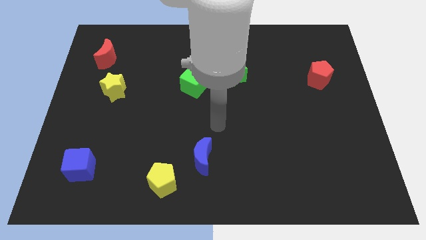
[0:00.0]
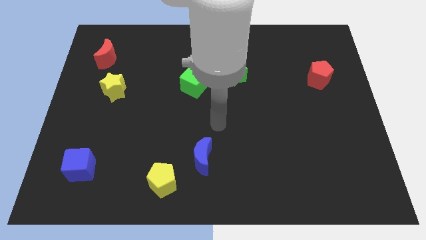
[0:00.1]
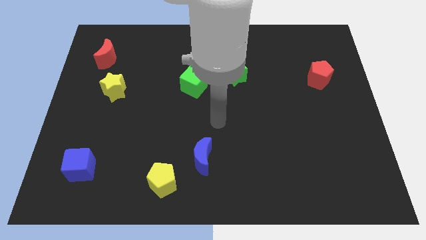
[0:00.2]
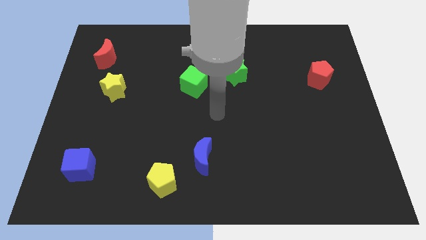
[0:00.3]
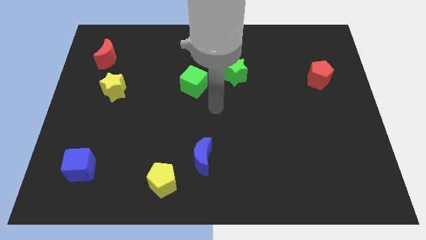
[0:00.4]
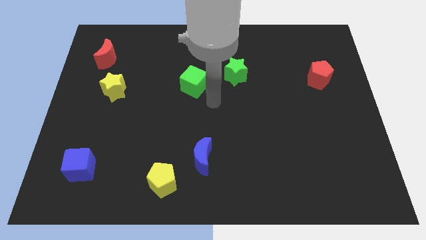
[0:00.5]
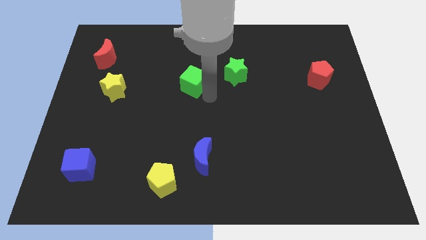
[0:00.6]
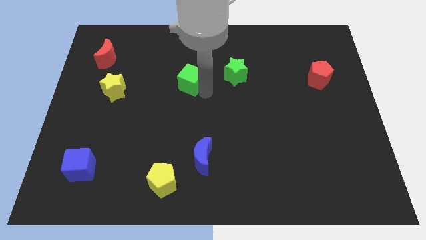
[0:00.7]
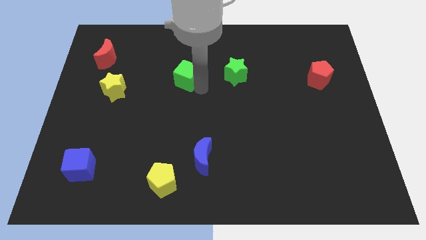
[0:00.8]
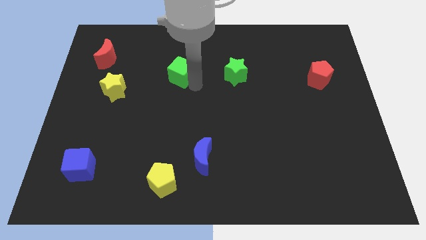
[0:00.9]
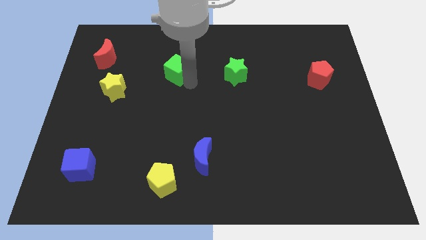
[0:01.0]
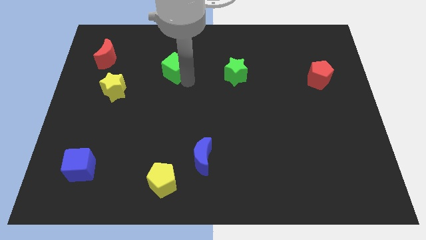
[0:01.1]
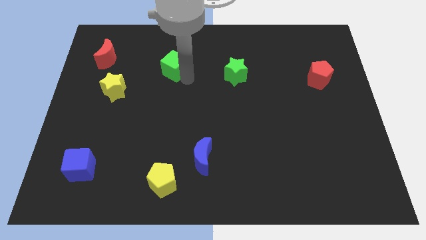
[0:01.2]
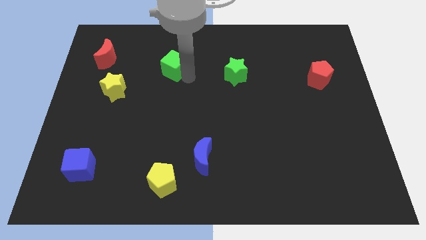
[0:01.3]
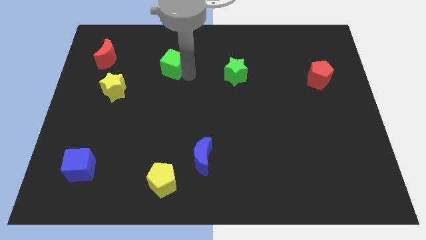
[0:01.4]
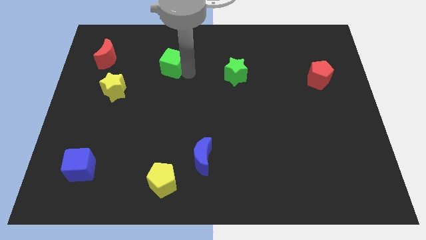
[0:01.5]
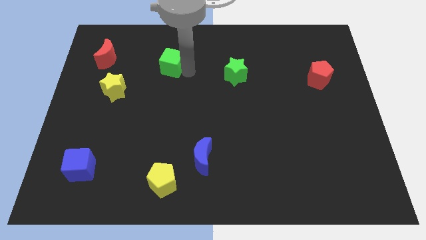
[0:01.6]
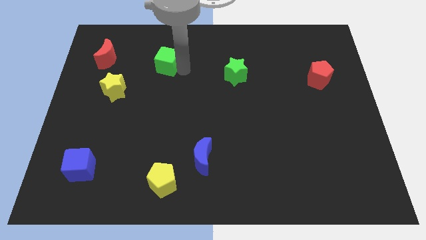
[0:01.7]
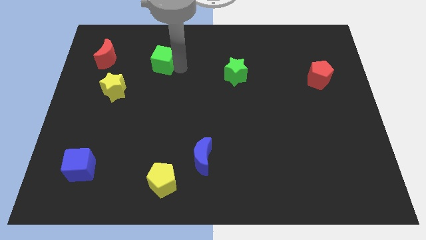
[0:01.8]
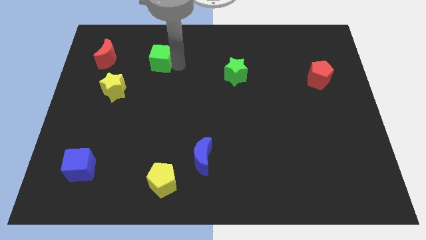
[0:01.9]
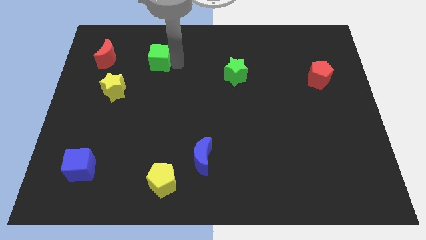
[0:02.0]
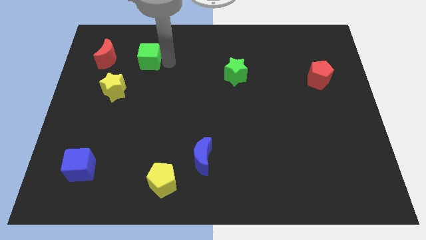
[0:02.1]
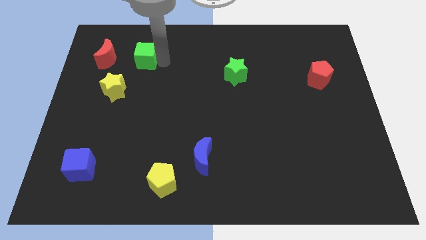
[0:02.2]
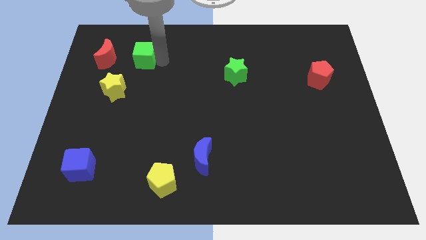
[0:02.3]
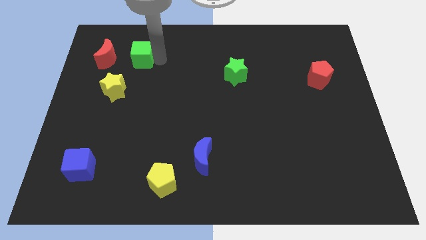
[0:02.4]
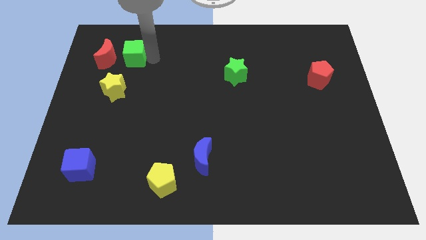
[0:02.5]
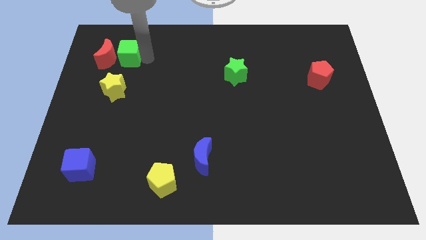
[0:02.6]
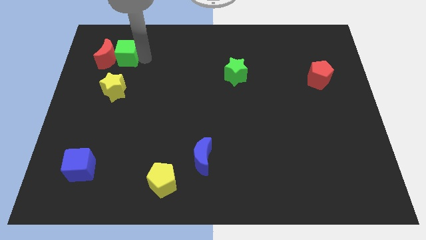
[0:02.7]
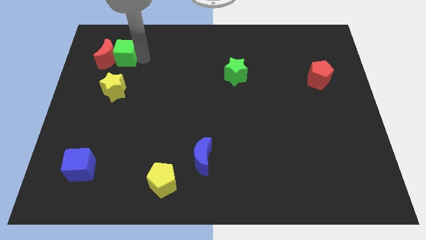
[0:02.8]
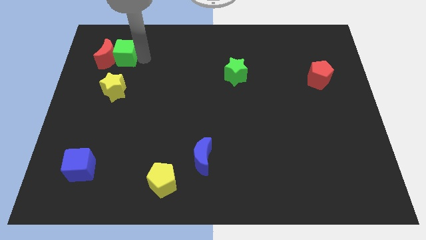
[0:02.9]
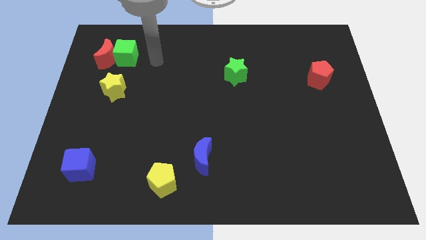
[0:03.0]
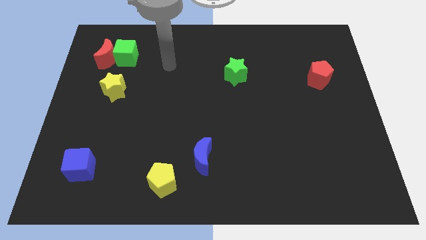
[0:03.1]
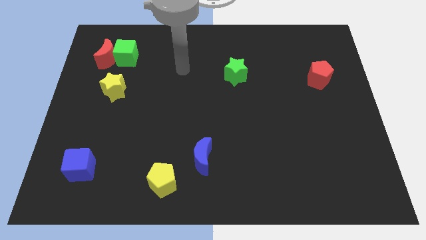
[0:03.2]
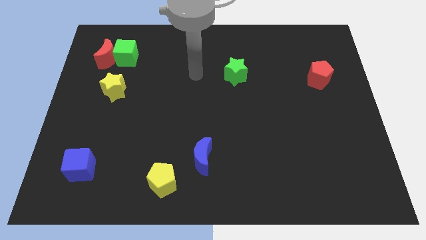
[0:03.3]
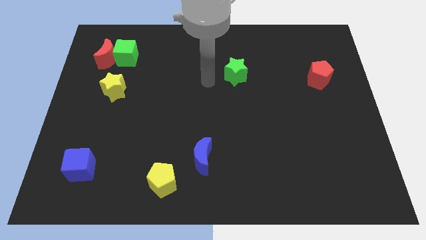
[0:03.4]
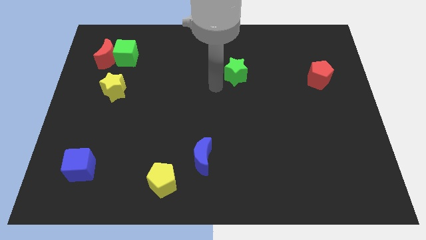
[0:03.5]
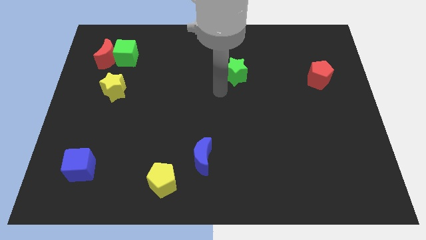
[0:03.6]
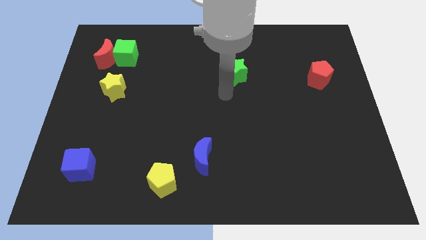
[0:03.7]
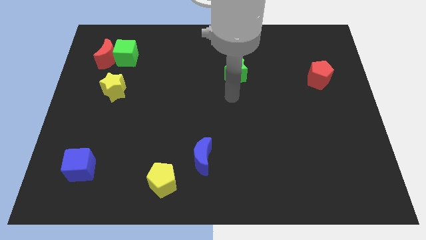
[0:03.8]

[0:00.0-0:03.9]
move your arm towards bottom side of the green star

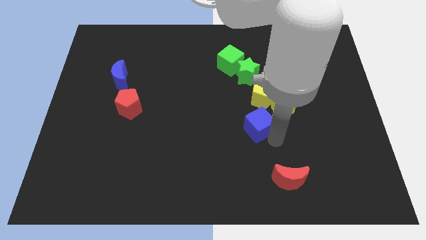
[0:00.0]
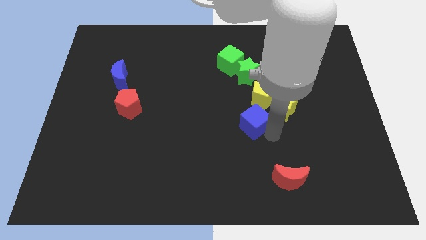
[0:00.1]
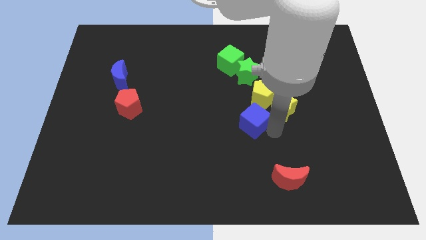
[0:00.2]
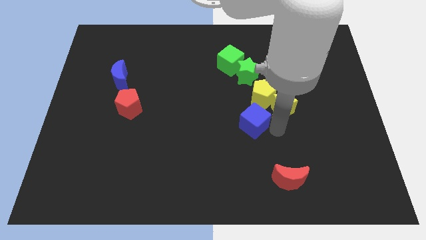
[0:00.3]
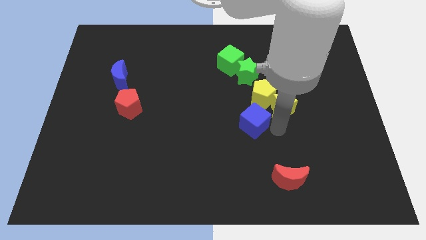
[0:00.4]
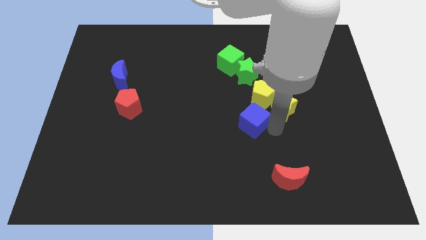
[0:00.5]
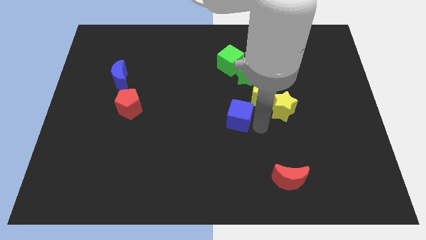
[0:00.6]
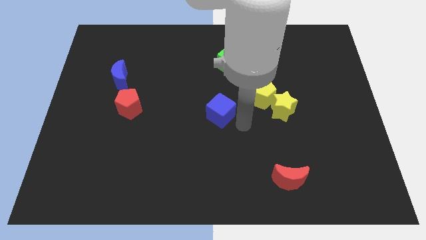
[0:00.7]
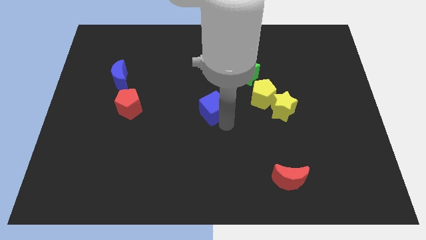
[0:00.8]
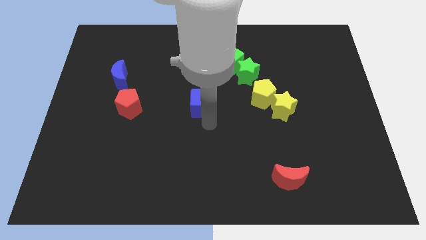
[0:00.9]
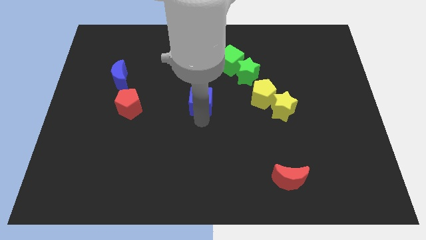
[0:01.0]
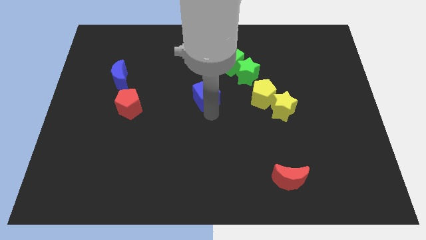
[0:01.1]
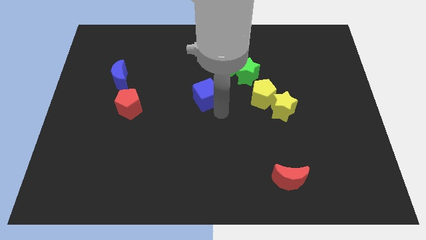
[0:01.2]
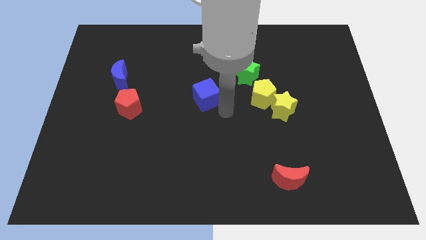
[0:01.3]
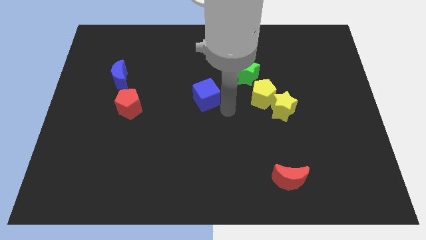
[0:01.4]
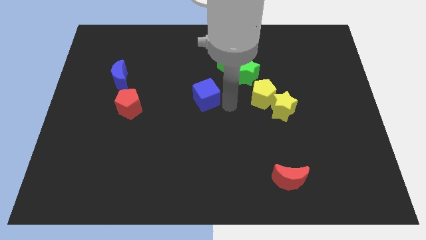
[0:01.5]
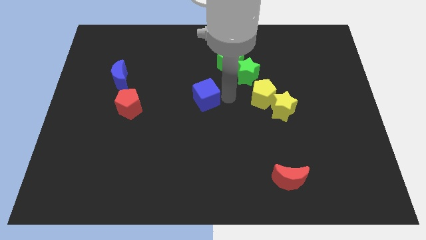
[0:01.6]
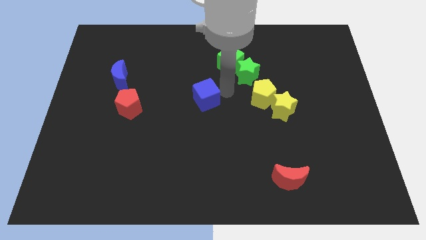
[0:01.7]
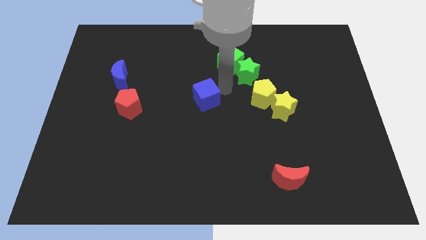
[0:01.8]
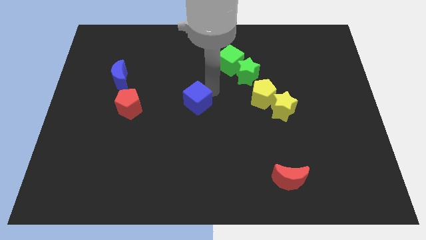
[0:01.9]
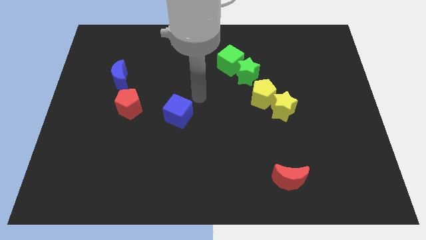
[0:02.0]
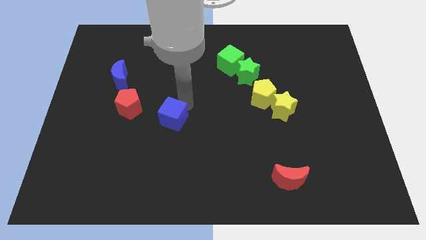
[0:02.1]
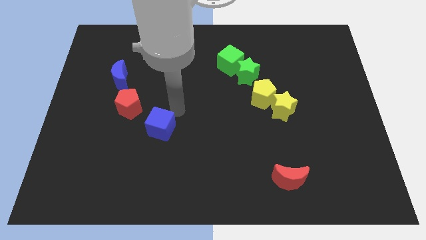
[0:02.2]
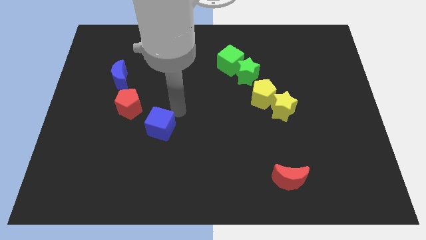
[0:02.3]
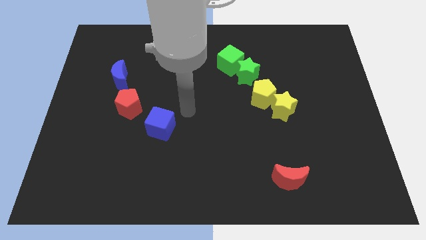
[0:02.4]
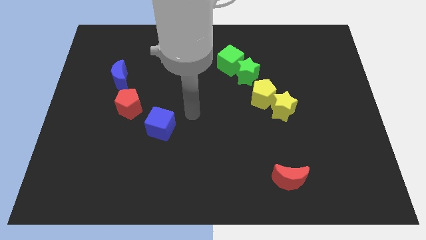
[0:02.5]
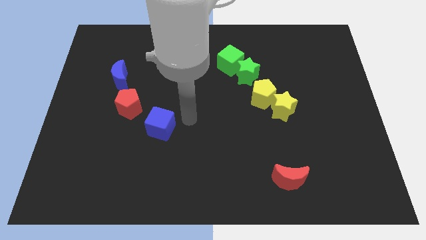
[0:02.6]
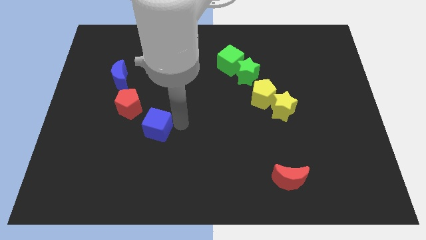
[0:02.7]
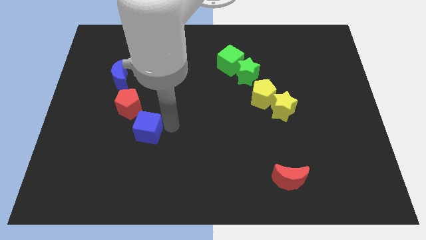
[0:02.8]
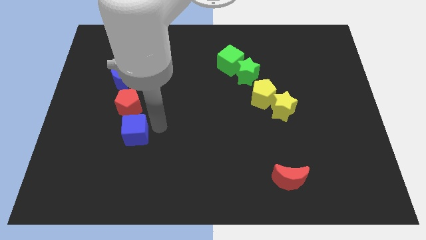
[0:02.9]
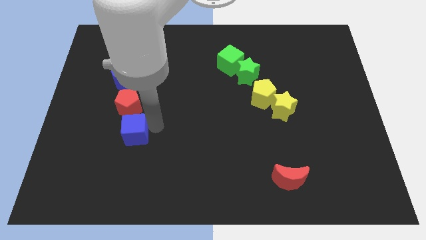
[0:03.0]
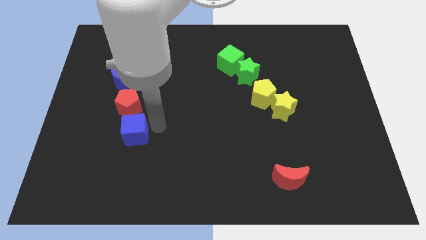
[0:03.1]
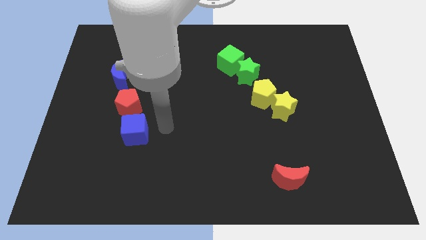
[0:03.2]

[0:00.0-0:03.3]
place the blue cube below red pentagon

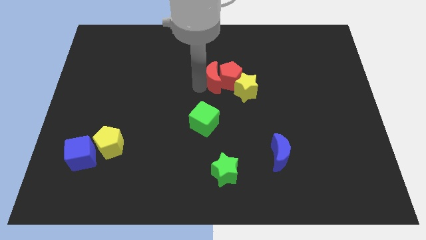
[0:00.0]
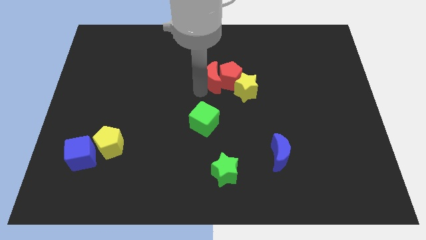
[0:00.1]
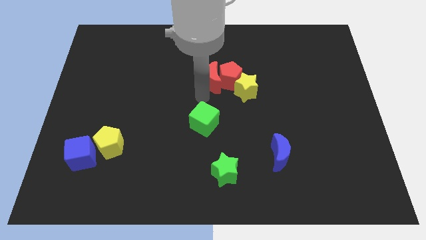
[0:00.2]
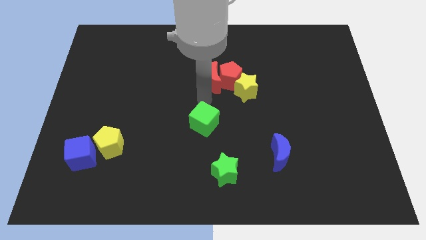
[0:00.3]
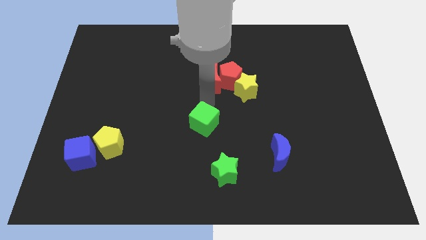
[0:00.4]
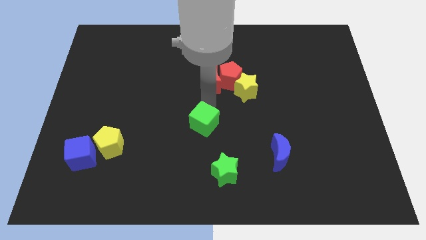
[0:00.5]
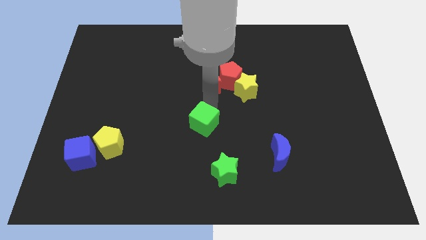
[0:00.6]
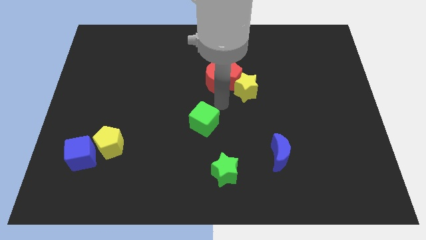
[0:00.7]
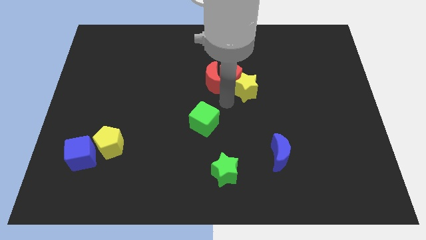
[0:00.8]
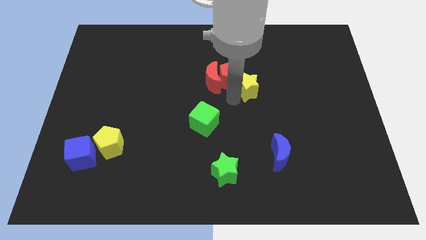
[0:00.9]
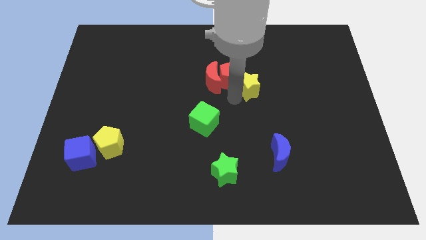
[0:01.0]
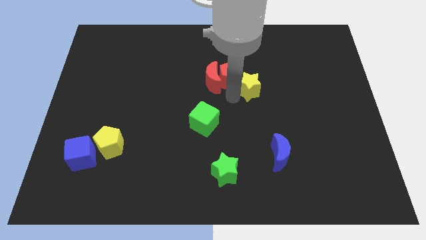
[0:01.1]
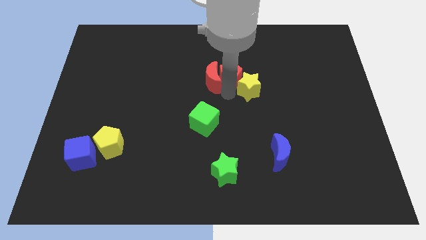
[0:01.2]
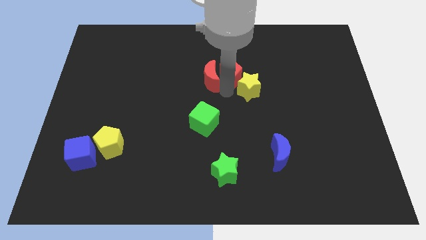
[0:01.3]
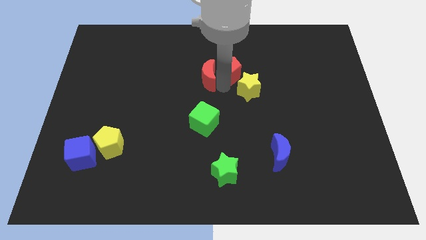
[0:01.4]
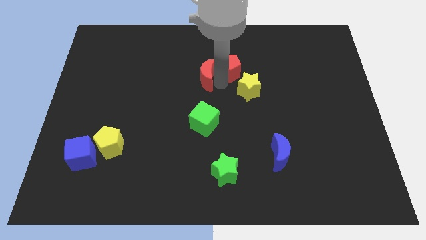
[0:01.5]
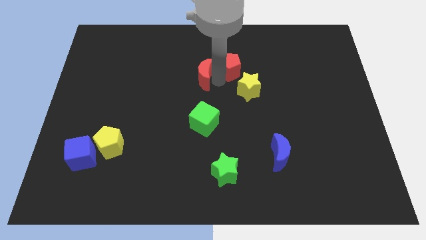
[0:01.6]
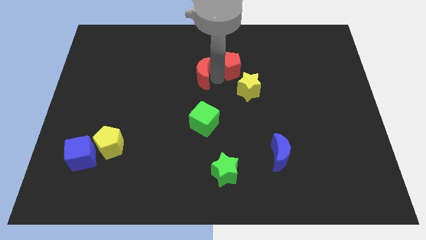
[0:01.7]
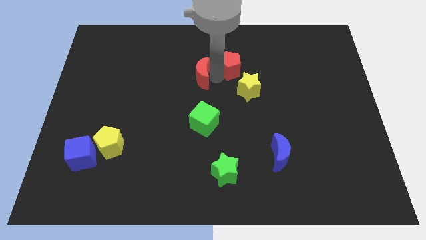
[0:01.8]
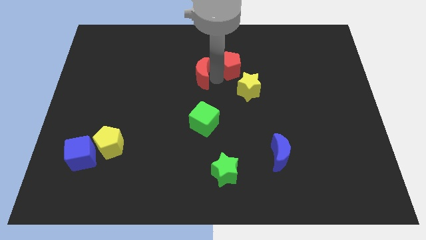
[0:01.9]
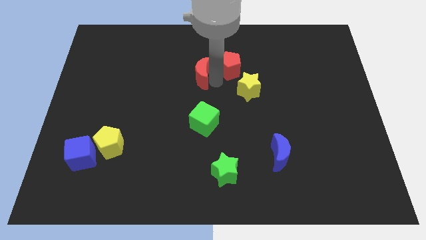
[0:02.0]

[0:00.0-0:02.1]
put your arm in between red blocks
